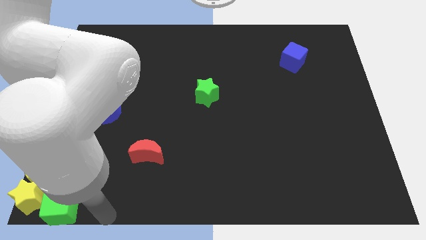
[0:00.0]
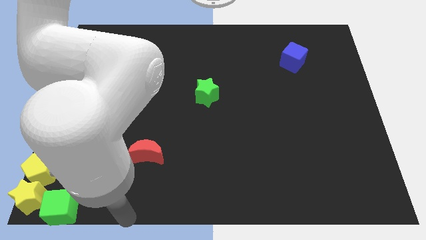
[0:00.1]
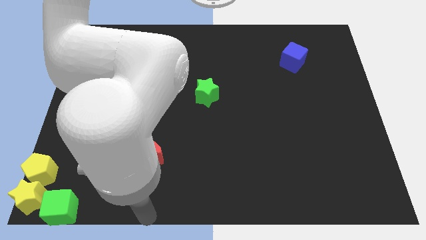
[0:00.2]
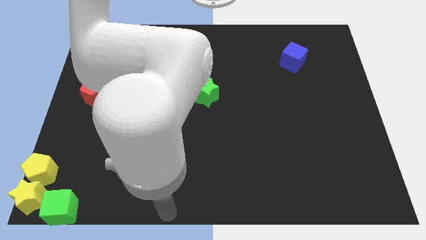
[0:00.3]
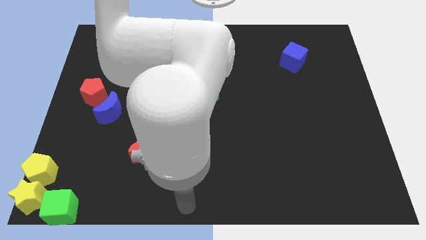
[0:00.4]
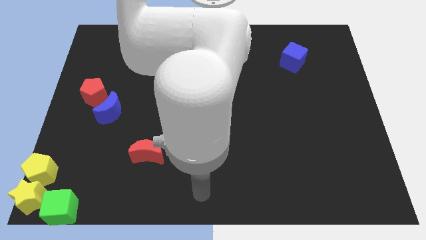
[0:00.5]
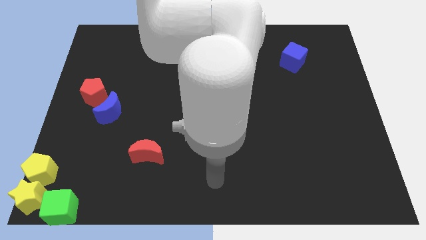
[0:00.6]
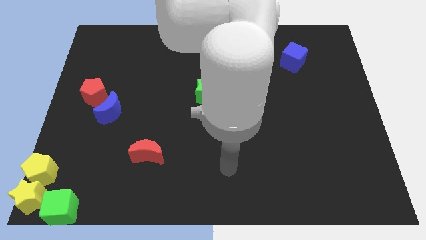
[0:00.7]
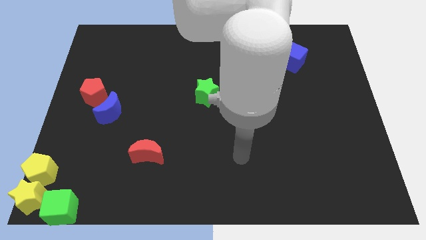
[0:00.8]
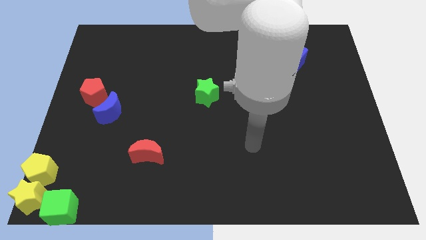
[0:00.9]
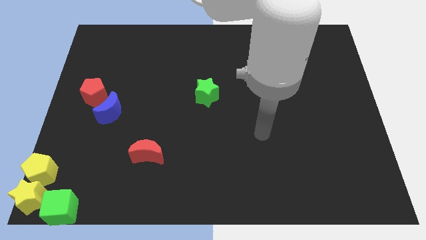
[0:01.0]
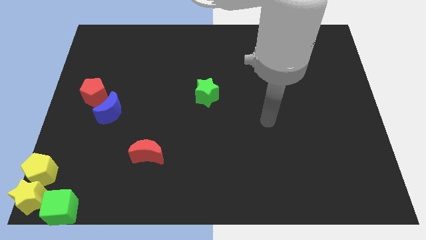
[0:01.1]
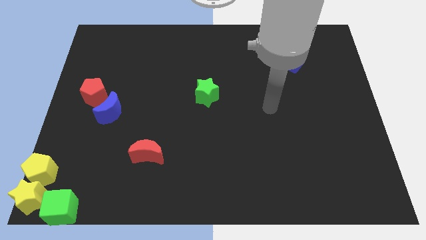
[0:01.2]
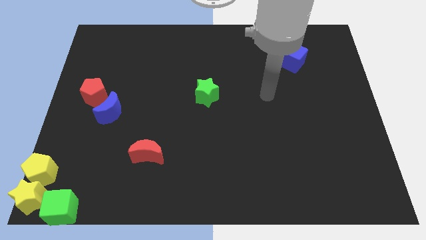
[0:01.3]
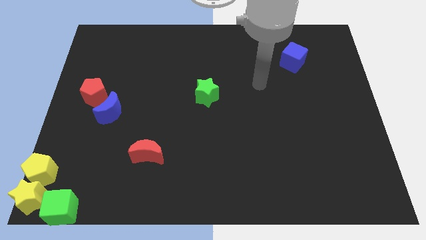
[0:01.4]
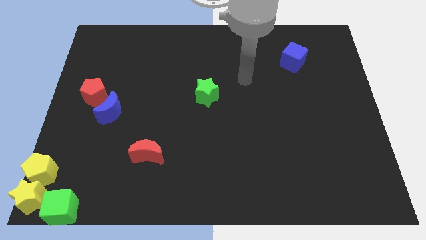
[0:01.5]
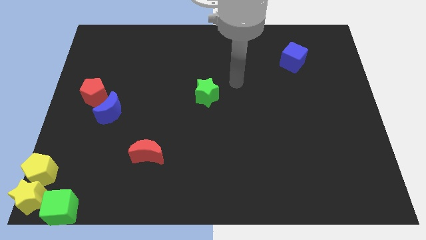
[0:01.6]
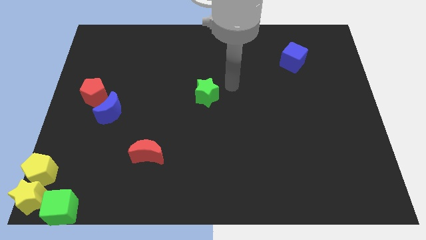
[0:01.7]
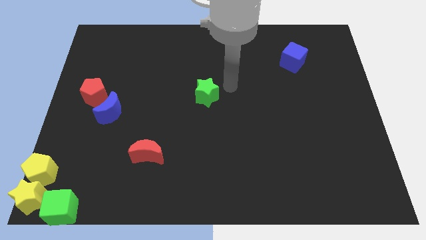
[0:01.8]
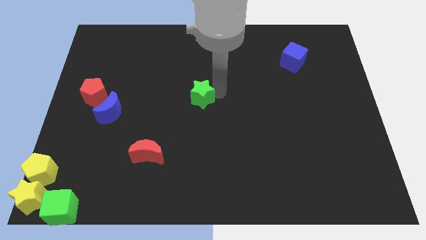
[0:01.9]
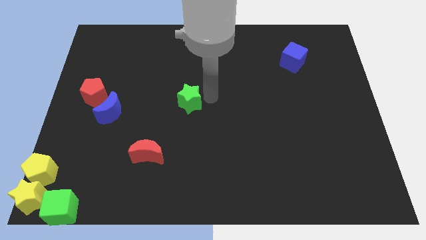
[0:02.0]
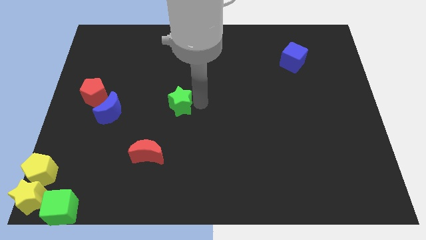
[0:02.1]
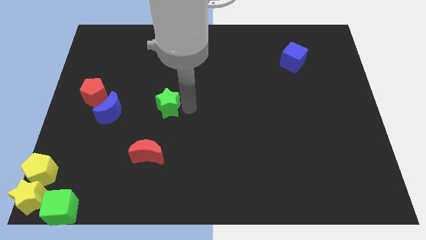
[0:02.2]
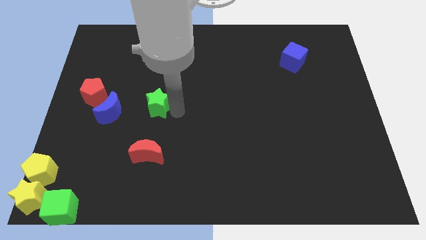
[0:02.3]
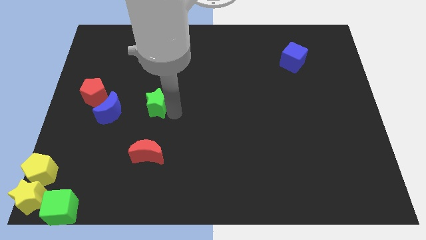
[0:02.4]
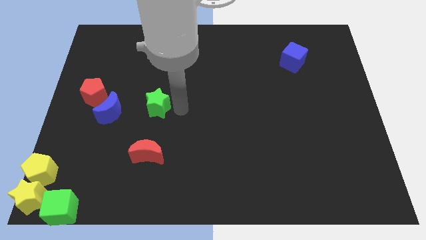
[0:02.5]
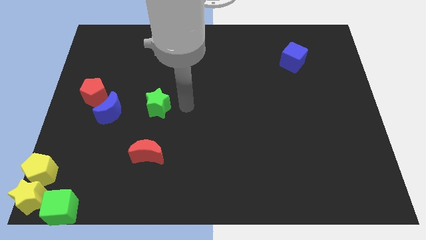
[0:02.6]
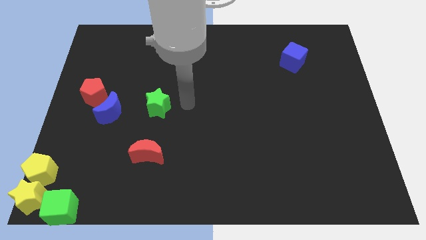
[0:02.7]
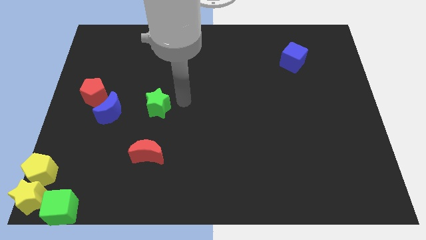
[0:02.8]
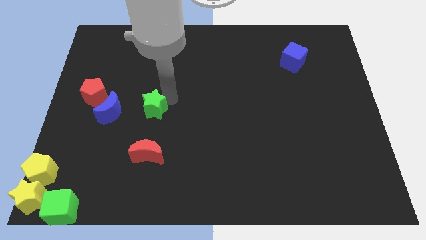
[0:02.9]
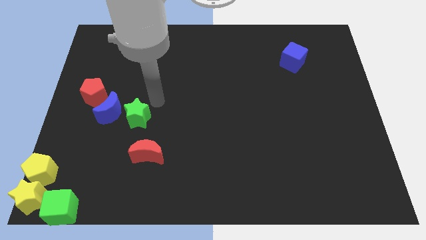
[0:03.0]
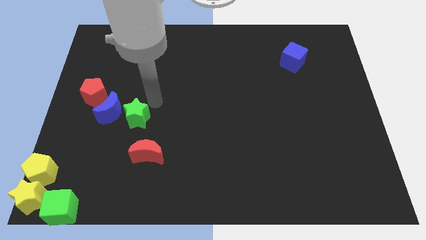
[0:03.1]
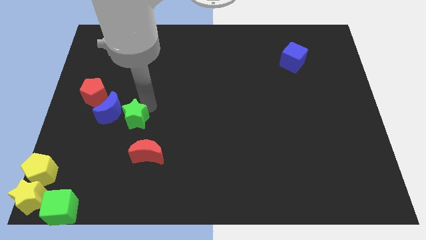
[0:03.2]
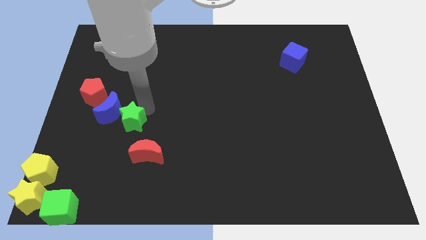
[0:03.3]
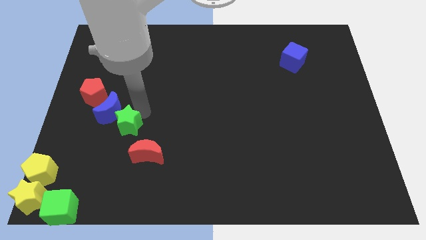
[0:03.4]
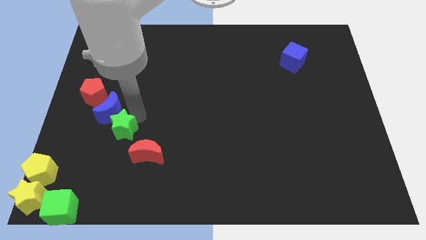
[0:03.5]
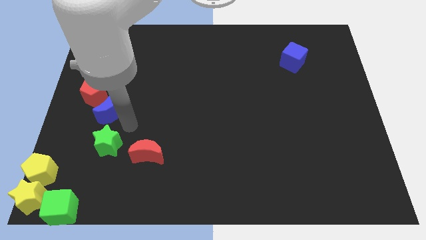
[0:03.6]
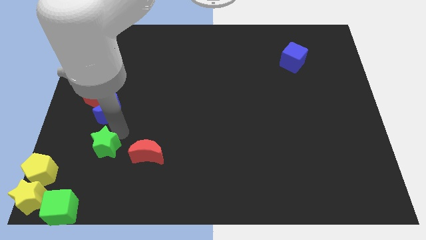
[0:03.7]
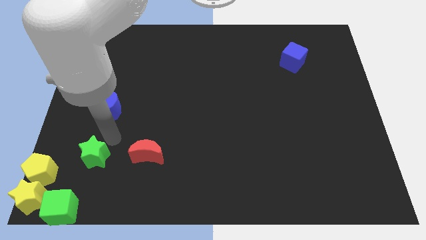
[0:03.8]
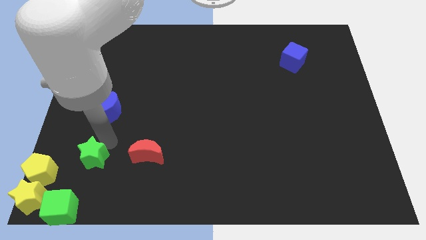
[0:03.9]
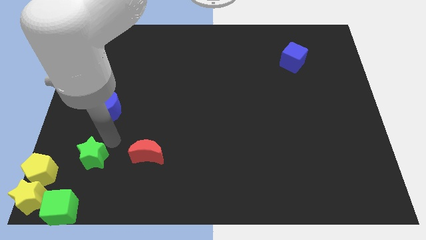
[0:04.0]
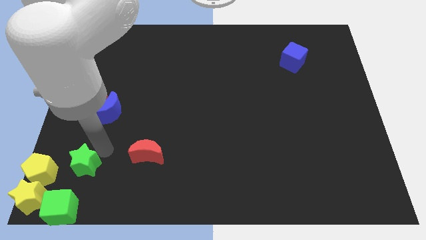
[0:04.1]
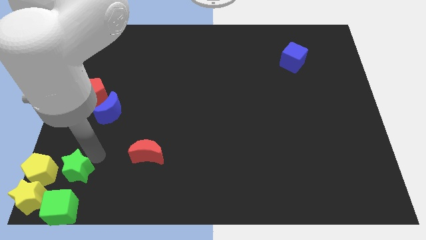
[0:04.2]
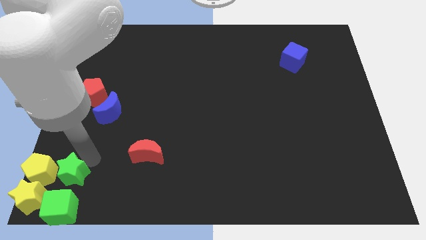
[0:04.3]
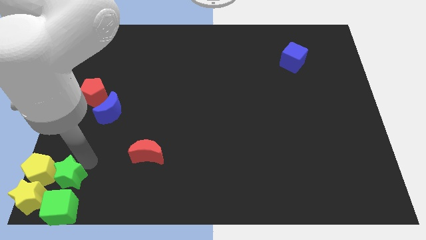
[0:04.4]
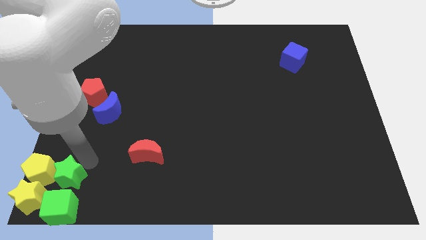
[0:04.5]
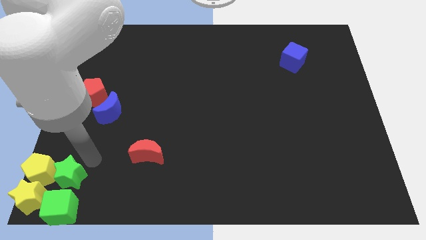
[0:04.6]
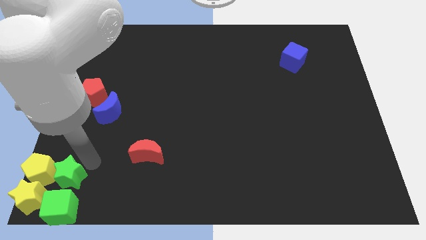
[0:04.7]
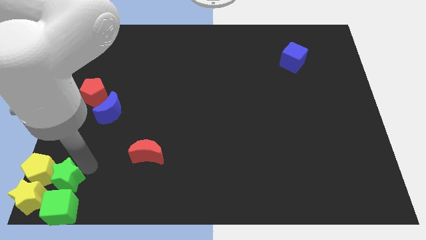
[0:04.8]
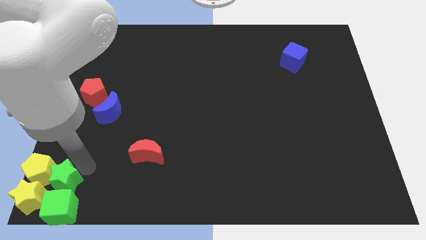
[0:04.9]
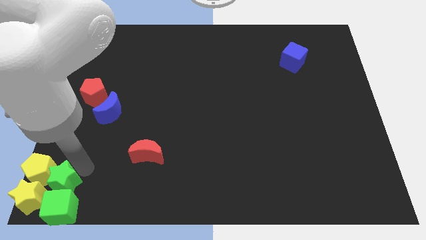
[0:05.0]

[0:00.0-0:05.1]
push the green star above the green cube

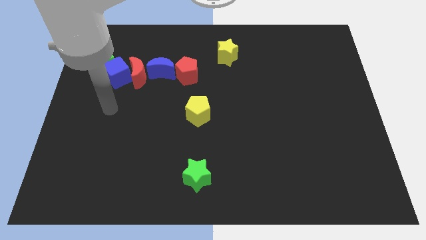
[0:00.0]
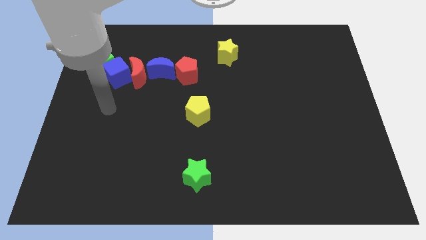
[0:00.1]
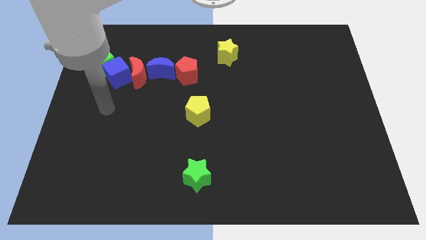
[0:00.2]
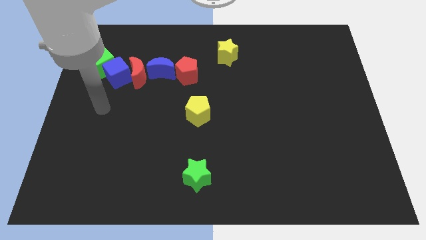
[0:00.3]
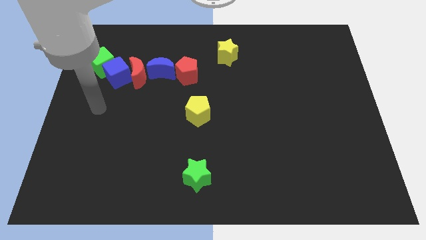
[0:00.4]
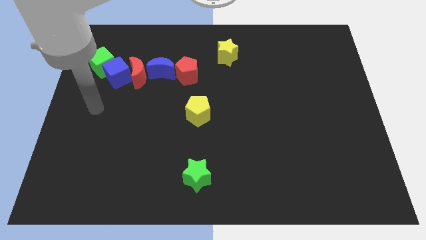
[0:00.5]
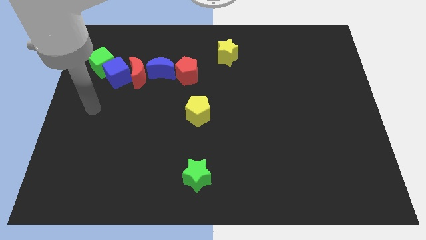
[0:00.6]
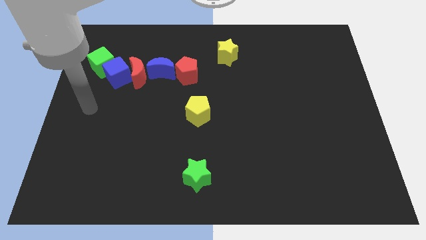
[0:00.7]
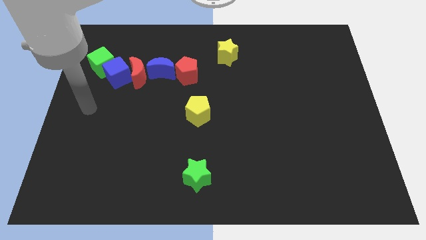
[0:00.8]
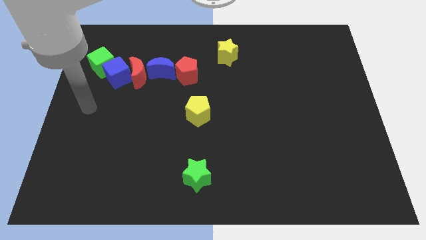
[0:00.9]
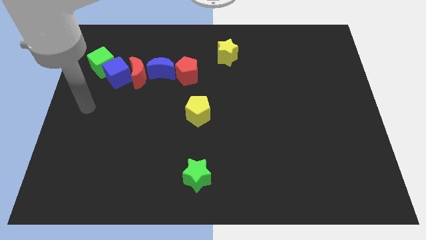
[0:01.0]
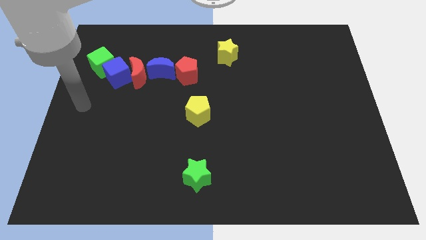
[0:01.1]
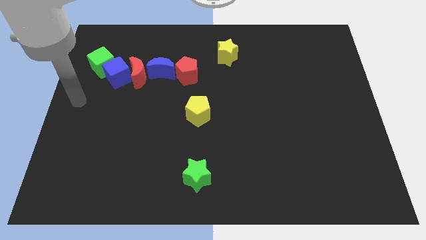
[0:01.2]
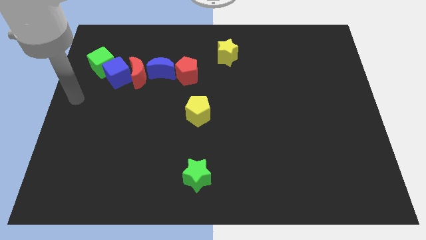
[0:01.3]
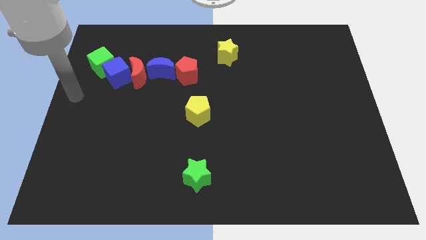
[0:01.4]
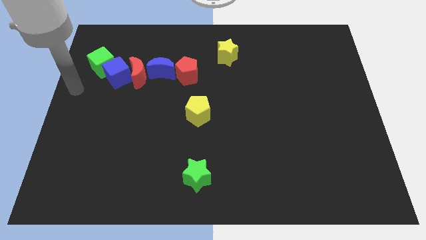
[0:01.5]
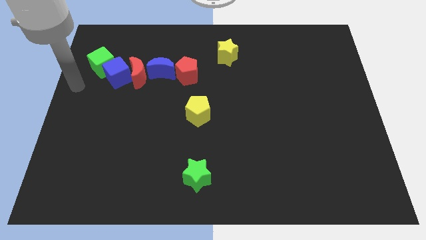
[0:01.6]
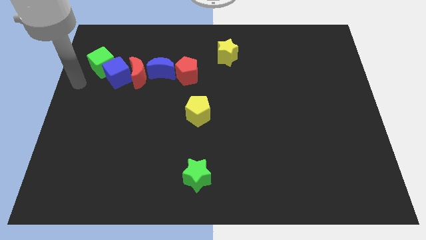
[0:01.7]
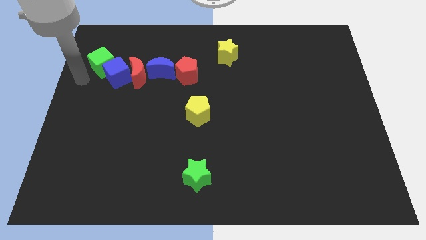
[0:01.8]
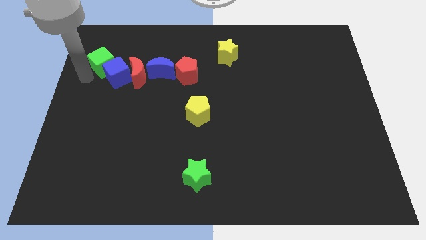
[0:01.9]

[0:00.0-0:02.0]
move your hand towards the green cube

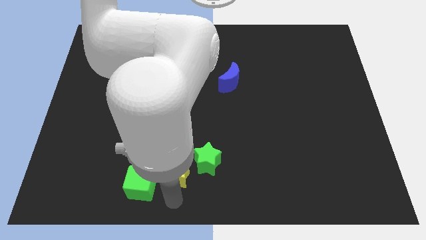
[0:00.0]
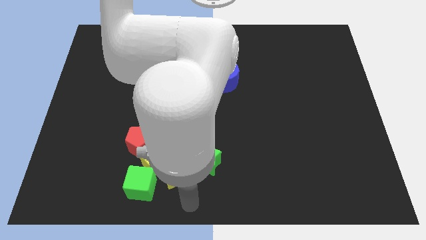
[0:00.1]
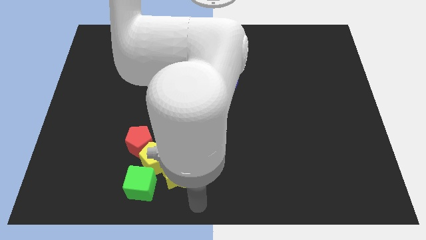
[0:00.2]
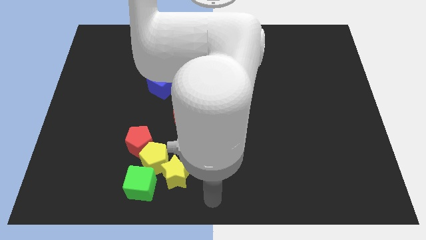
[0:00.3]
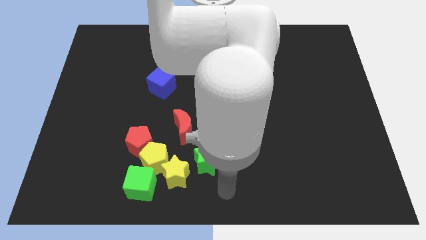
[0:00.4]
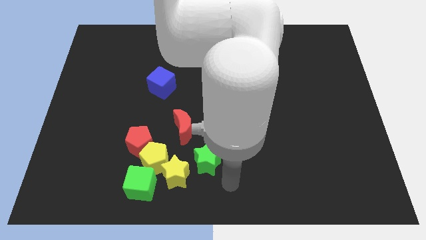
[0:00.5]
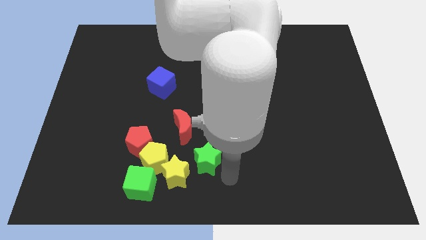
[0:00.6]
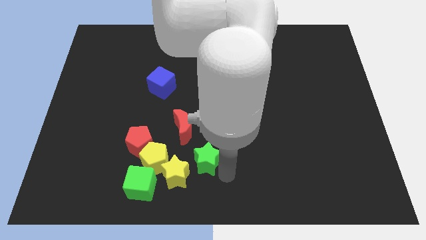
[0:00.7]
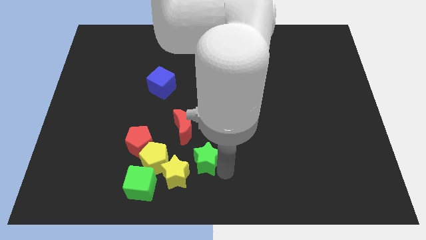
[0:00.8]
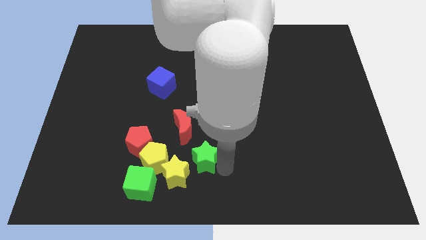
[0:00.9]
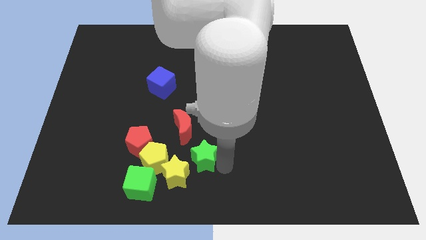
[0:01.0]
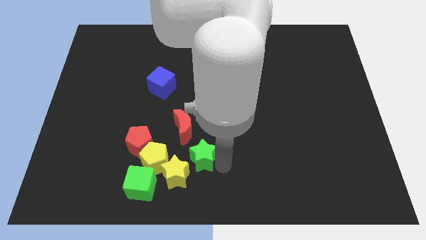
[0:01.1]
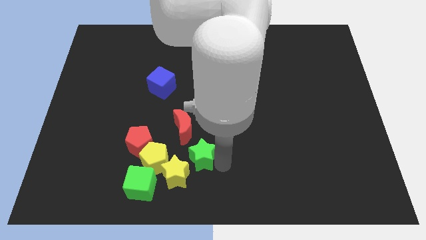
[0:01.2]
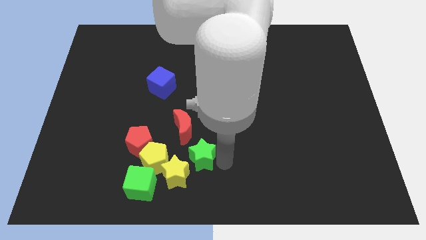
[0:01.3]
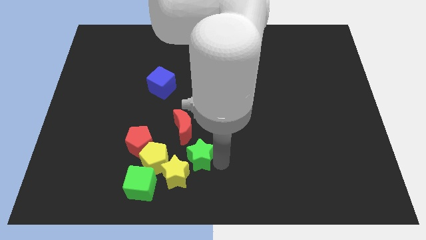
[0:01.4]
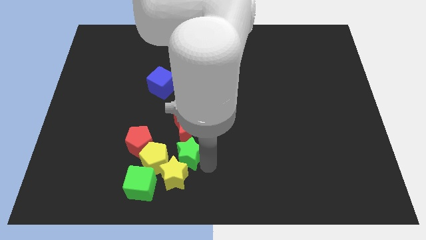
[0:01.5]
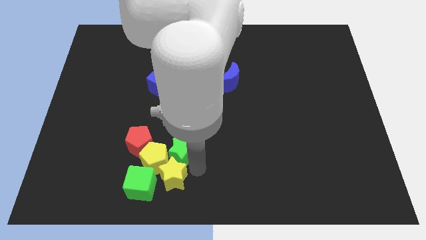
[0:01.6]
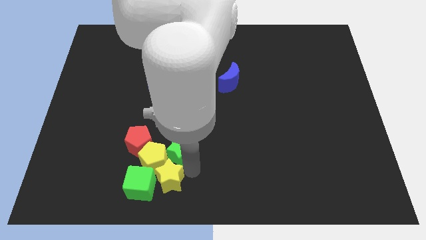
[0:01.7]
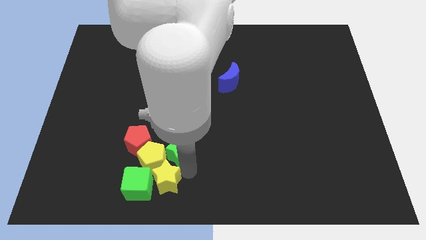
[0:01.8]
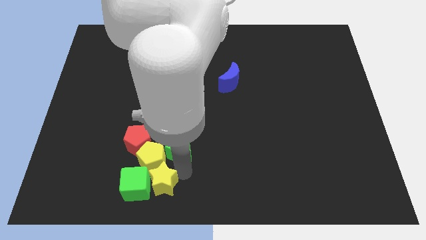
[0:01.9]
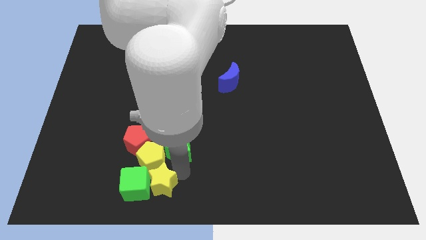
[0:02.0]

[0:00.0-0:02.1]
push the green star into yellow blocks at the bottom
